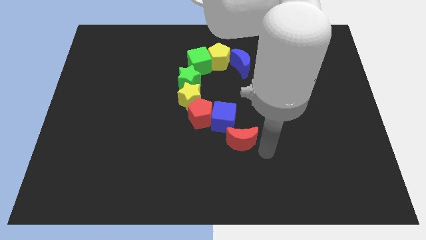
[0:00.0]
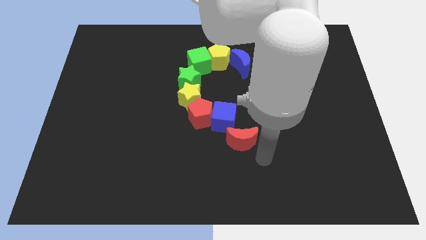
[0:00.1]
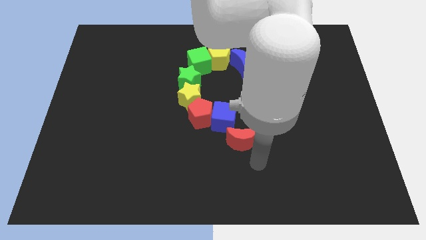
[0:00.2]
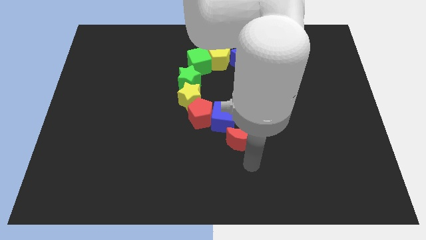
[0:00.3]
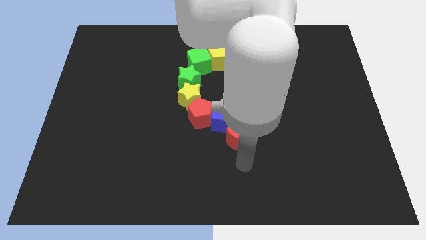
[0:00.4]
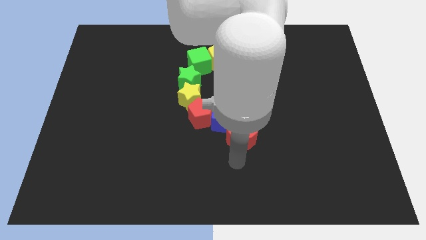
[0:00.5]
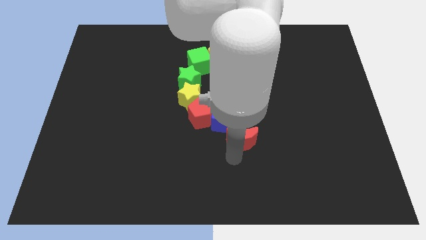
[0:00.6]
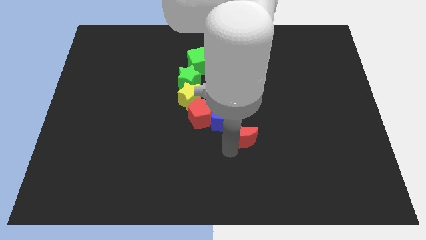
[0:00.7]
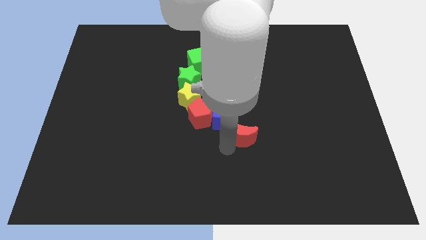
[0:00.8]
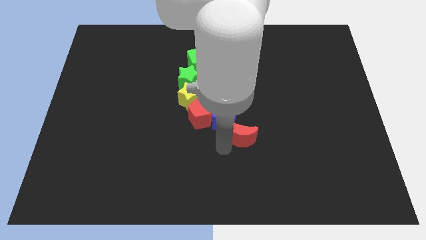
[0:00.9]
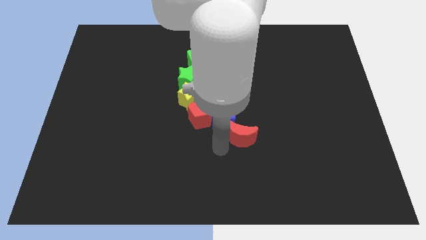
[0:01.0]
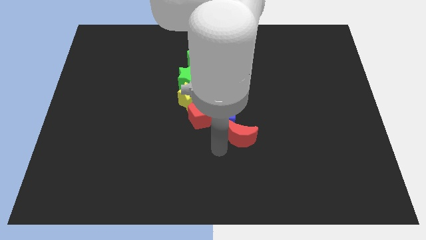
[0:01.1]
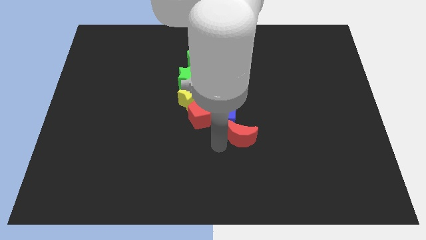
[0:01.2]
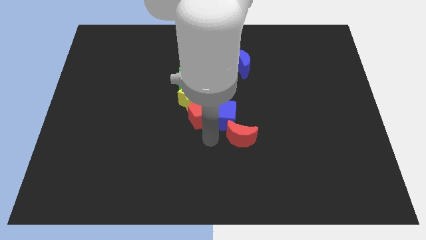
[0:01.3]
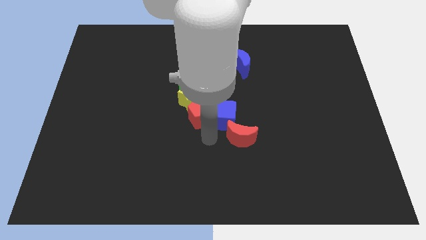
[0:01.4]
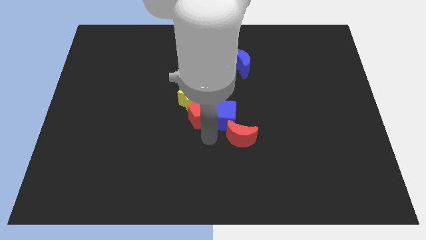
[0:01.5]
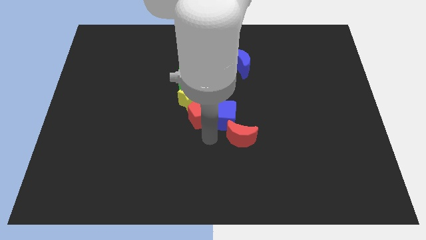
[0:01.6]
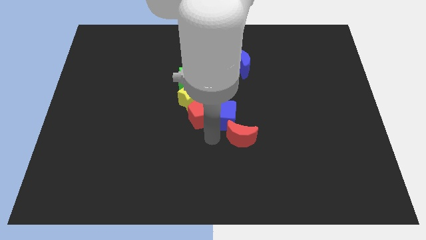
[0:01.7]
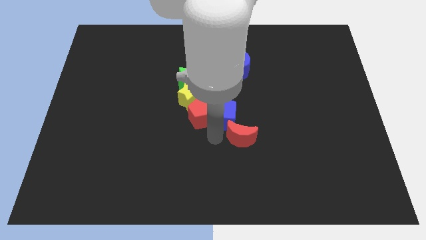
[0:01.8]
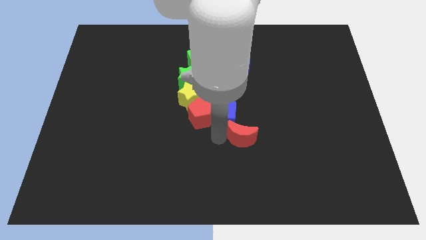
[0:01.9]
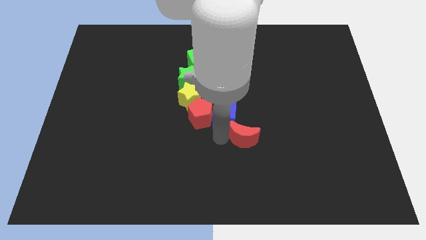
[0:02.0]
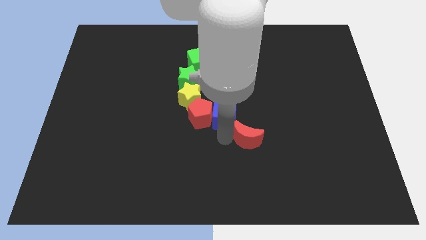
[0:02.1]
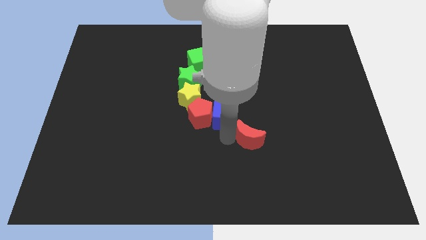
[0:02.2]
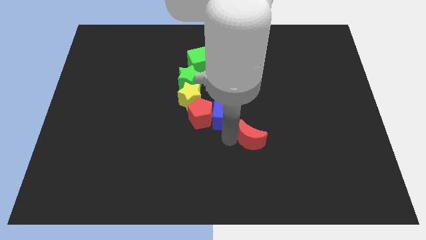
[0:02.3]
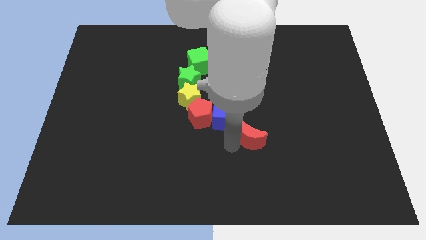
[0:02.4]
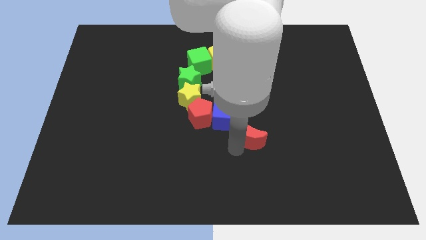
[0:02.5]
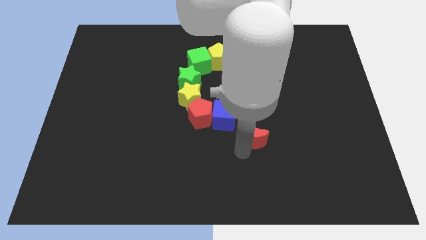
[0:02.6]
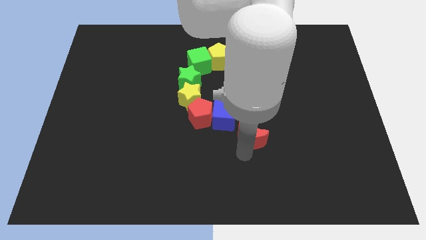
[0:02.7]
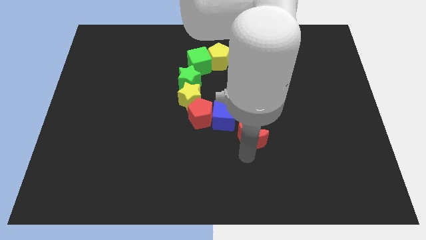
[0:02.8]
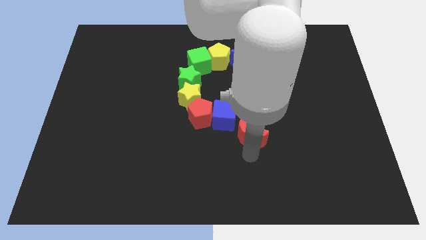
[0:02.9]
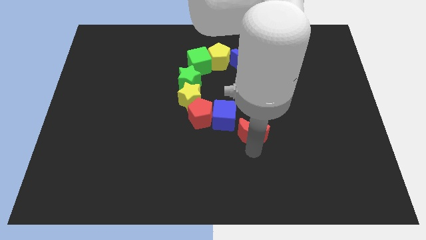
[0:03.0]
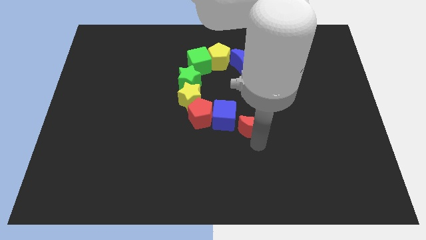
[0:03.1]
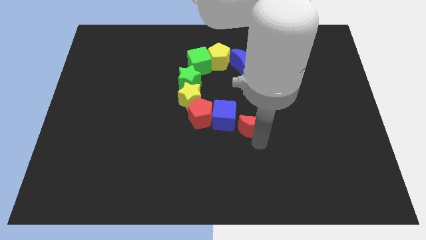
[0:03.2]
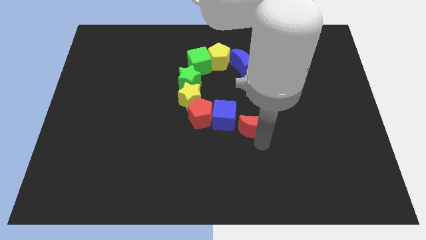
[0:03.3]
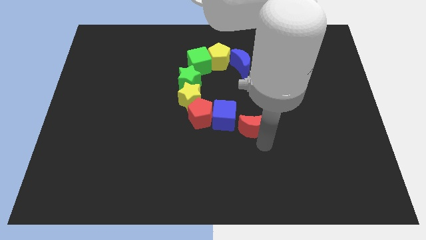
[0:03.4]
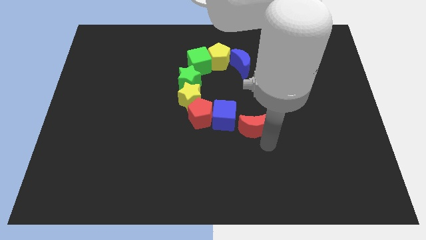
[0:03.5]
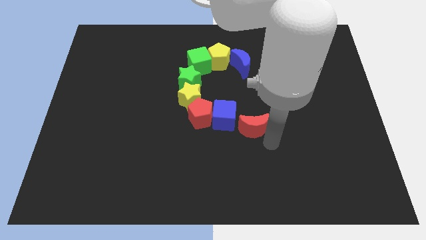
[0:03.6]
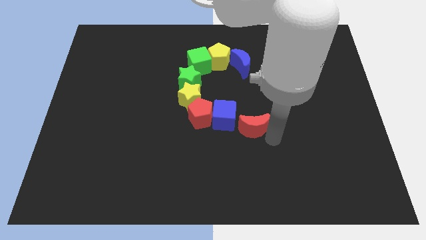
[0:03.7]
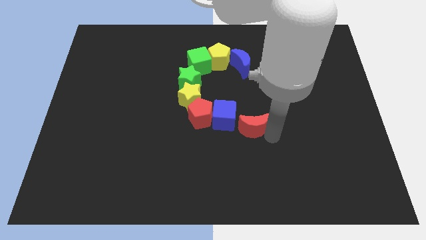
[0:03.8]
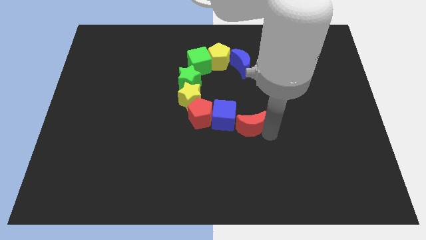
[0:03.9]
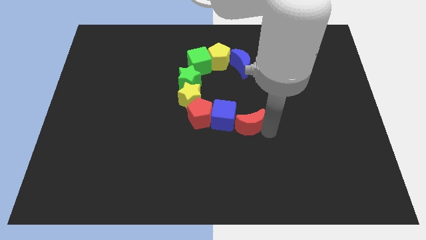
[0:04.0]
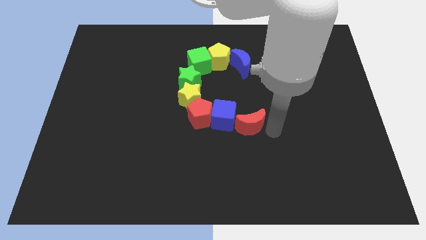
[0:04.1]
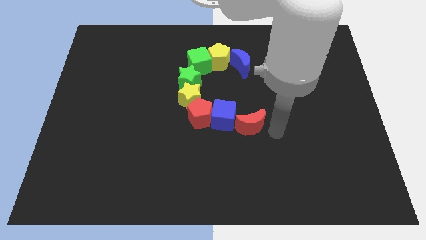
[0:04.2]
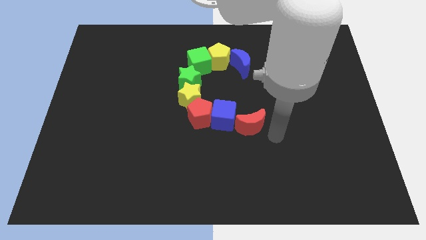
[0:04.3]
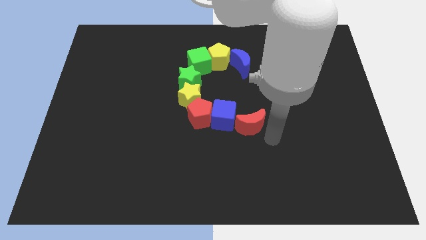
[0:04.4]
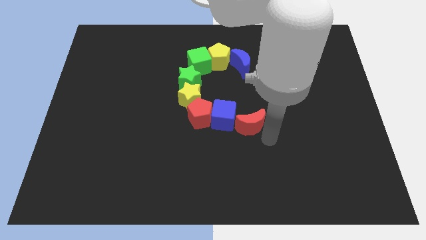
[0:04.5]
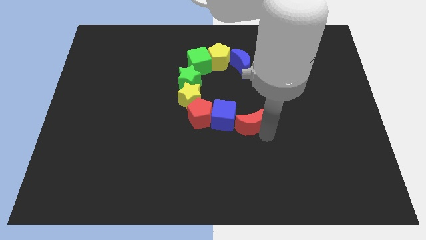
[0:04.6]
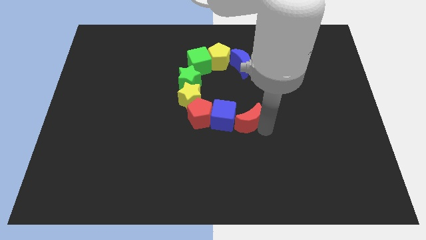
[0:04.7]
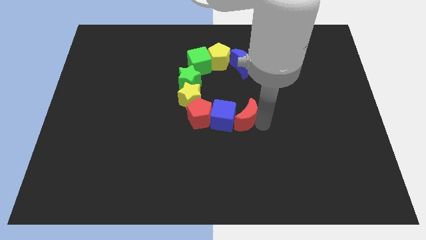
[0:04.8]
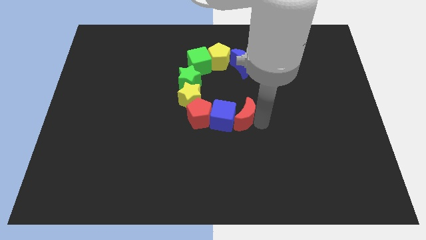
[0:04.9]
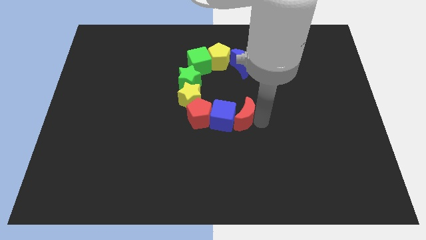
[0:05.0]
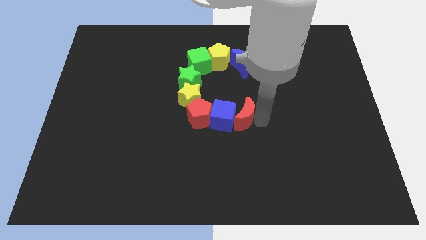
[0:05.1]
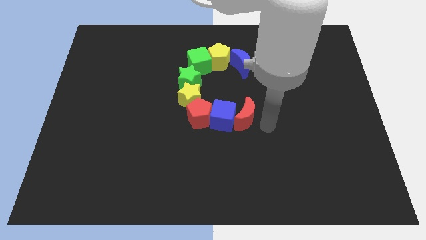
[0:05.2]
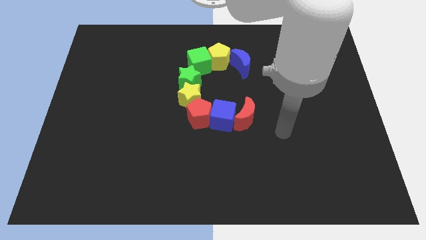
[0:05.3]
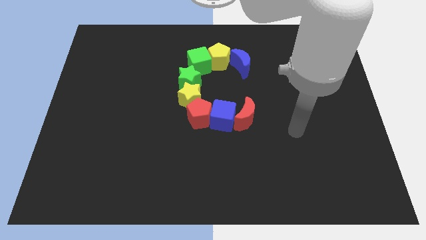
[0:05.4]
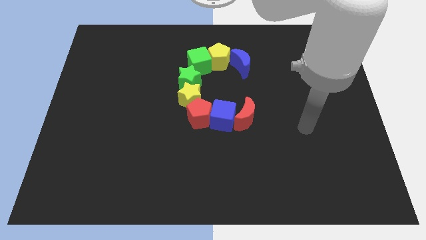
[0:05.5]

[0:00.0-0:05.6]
place the red crescent into the right of the blue cube

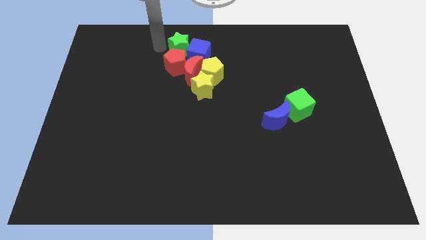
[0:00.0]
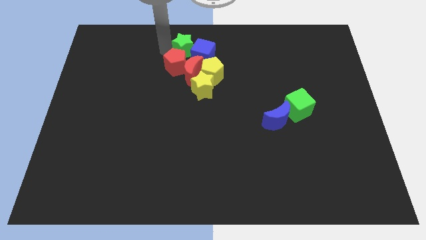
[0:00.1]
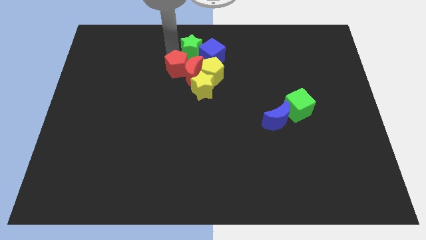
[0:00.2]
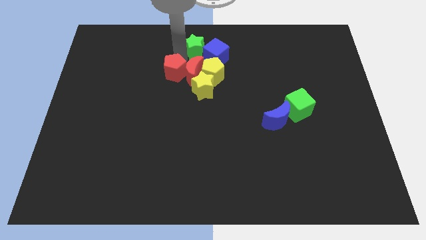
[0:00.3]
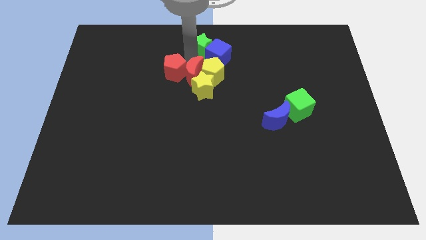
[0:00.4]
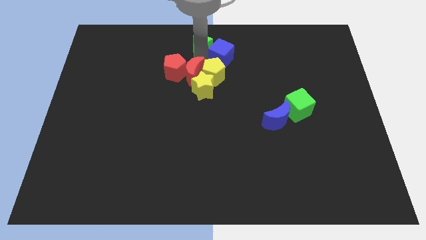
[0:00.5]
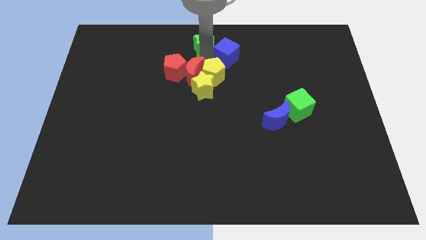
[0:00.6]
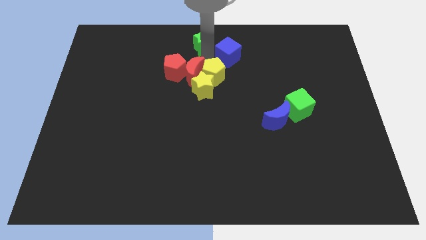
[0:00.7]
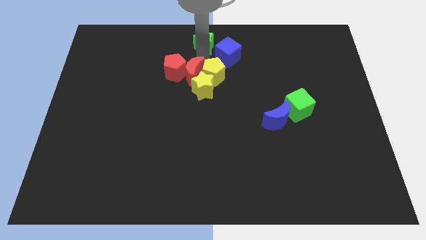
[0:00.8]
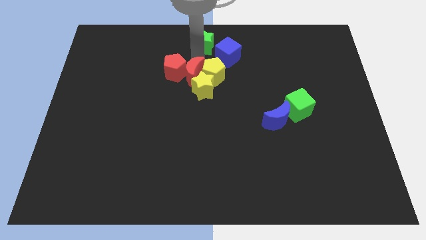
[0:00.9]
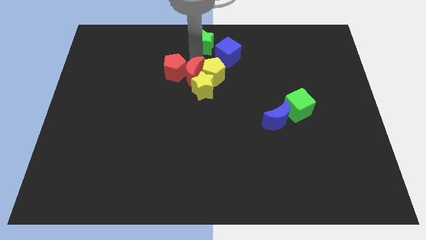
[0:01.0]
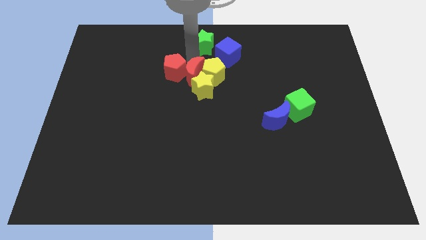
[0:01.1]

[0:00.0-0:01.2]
place your arm at the top of the red crescent

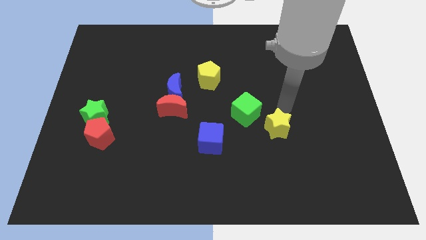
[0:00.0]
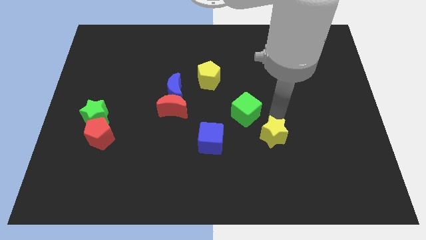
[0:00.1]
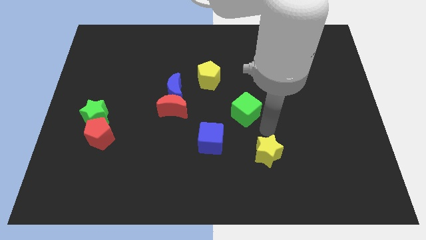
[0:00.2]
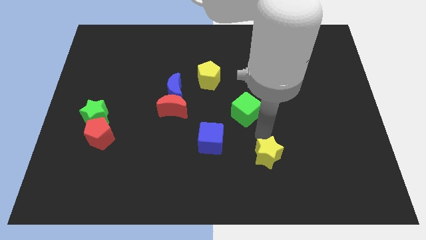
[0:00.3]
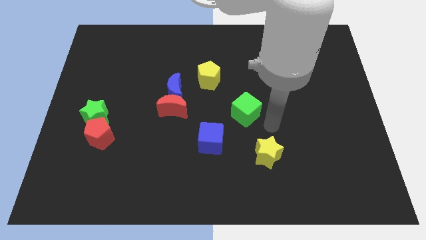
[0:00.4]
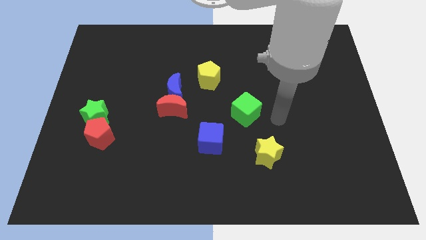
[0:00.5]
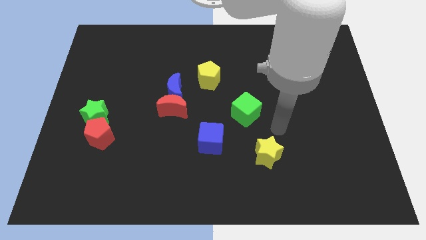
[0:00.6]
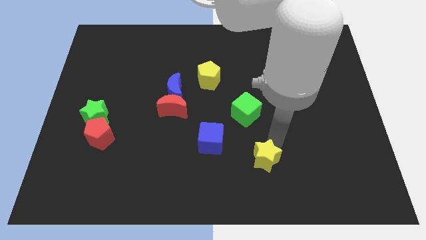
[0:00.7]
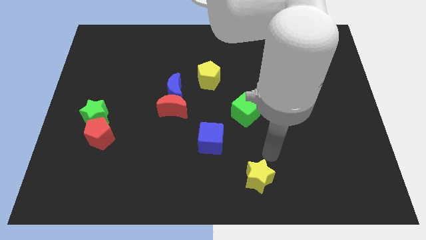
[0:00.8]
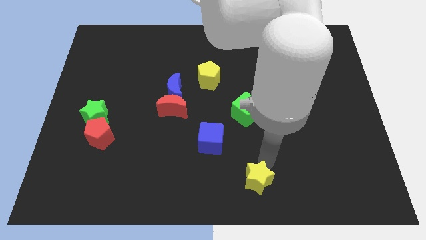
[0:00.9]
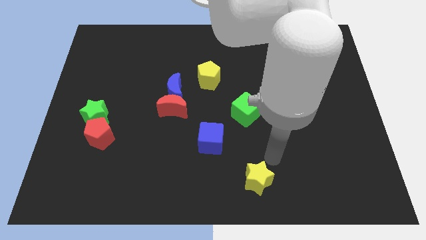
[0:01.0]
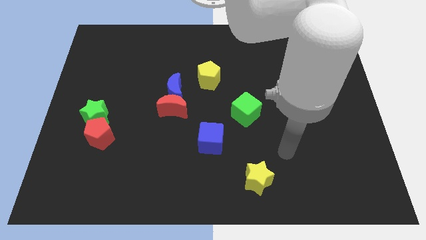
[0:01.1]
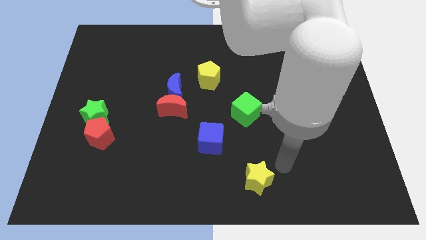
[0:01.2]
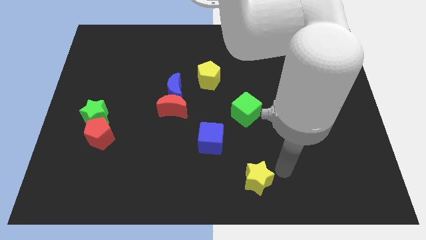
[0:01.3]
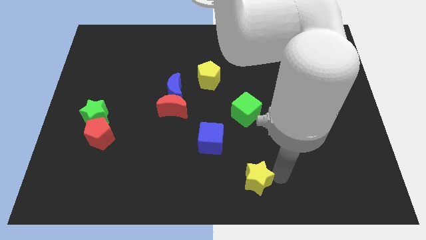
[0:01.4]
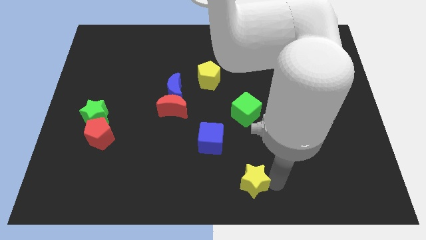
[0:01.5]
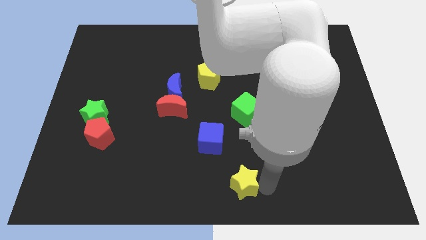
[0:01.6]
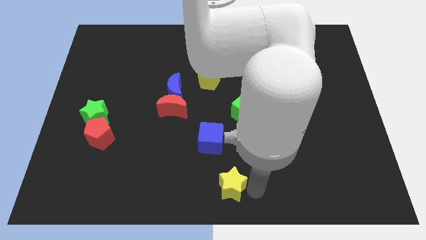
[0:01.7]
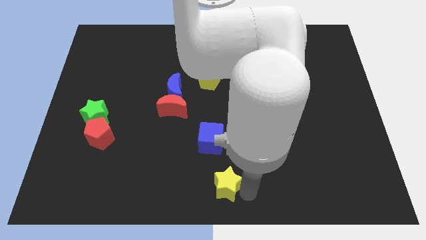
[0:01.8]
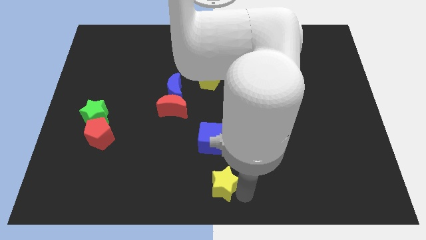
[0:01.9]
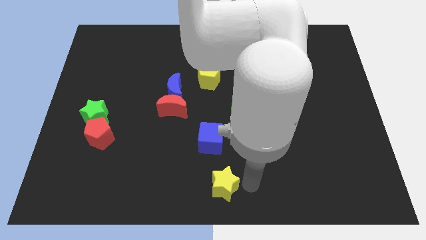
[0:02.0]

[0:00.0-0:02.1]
place the yellow star below the blue moon
